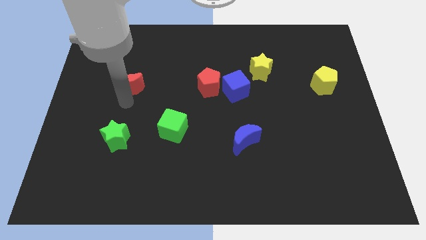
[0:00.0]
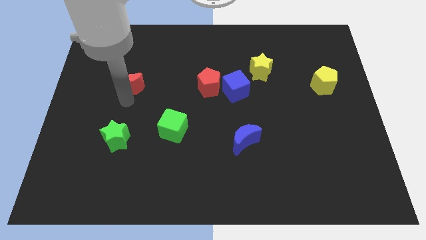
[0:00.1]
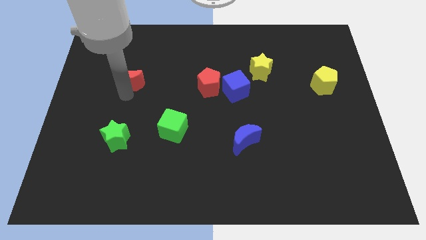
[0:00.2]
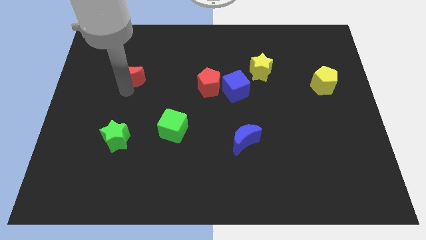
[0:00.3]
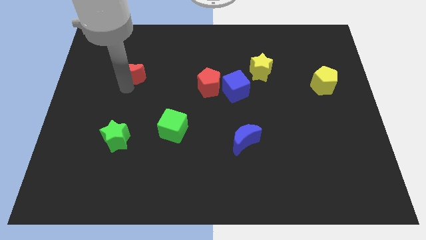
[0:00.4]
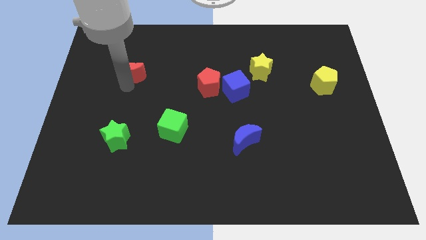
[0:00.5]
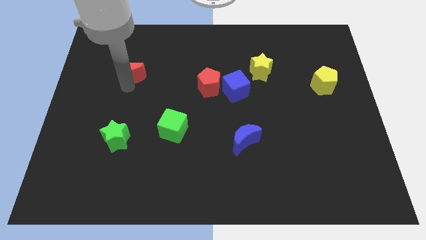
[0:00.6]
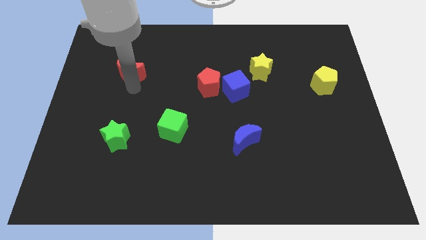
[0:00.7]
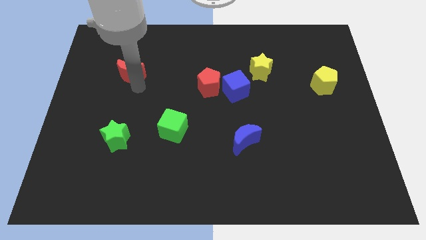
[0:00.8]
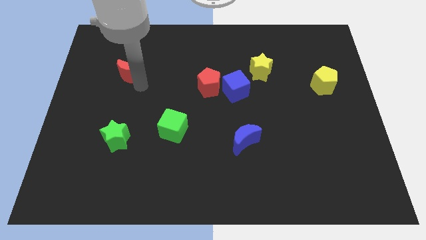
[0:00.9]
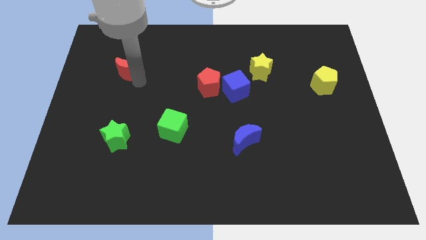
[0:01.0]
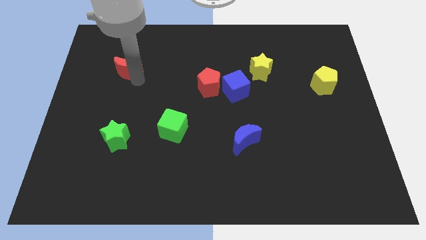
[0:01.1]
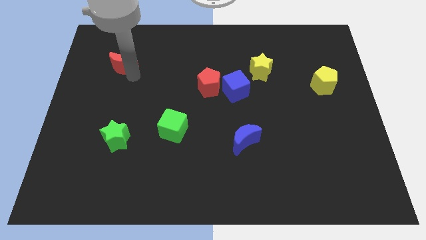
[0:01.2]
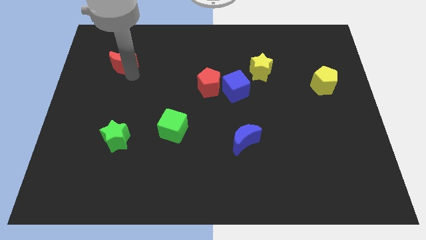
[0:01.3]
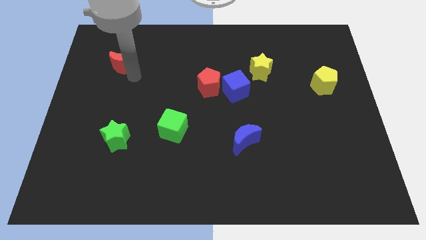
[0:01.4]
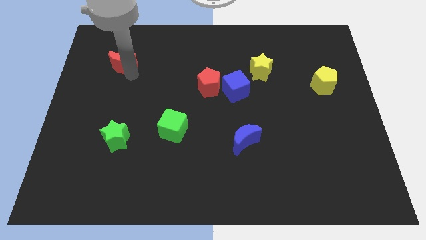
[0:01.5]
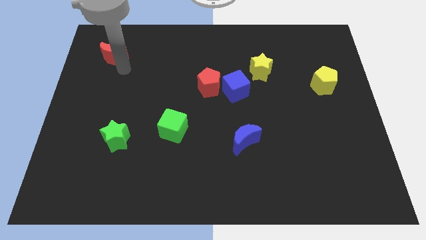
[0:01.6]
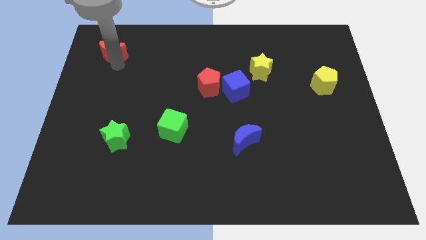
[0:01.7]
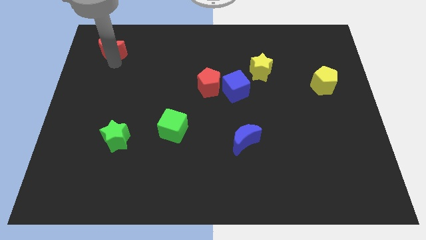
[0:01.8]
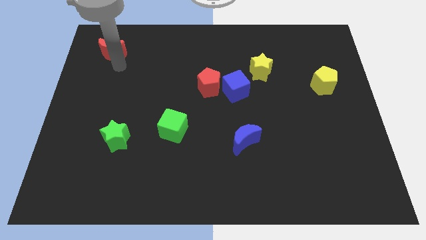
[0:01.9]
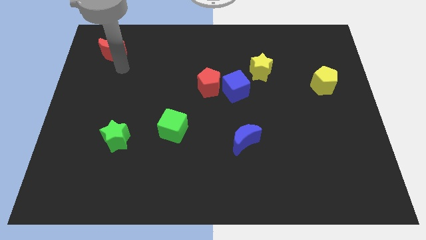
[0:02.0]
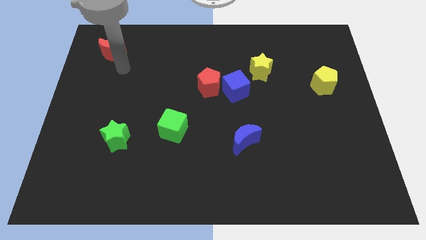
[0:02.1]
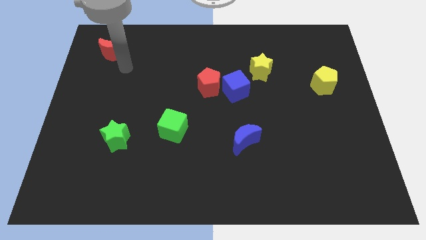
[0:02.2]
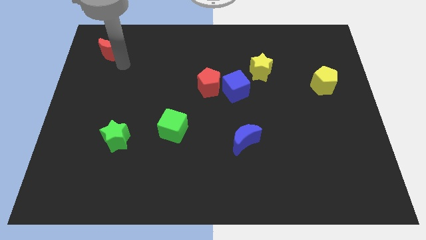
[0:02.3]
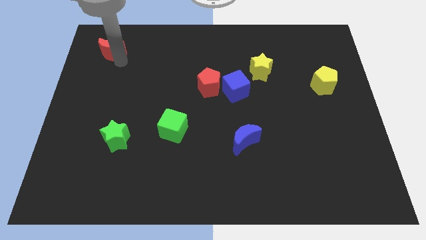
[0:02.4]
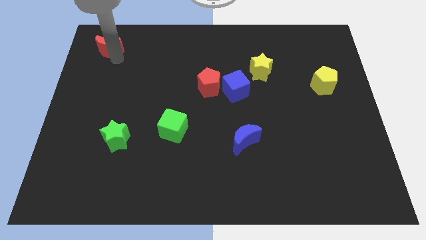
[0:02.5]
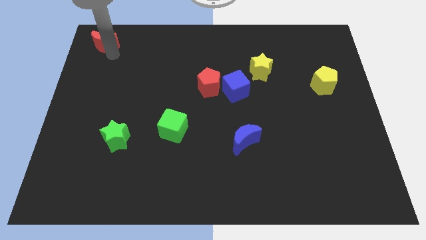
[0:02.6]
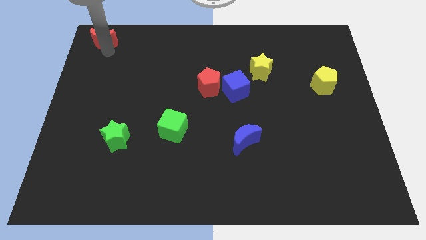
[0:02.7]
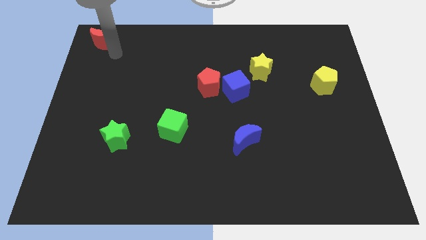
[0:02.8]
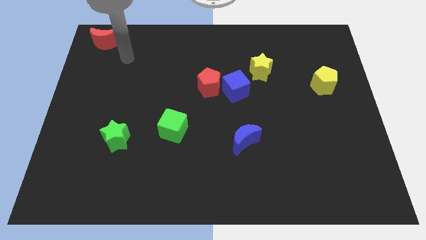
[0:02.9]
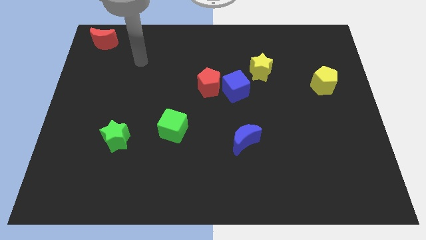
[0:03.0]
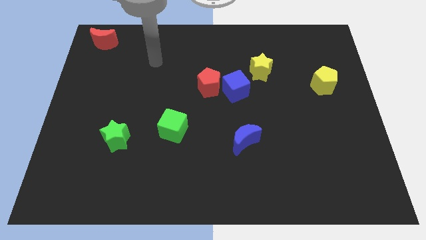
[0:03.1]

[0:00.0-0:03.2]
move the red crescent to the top left corner of the board

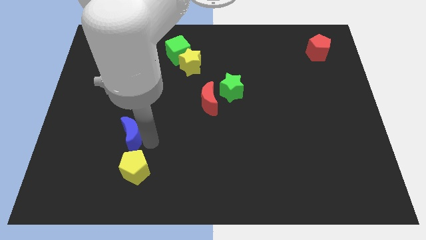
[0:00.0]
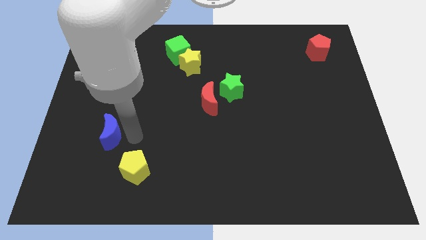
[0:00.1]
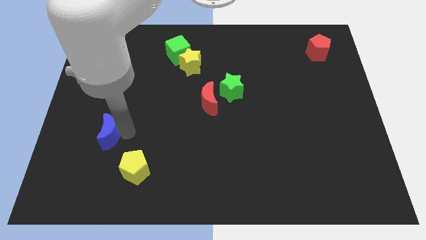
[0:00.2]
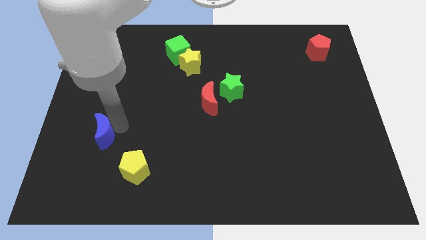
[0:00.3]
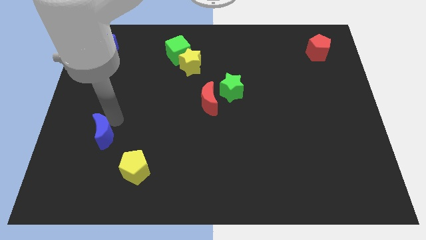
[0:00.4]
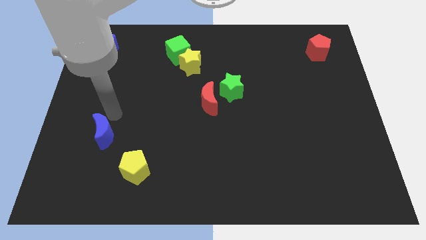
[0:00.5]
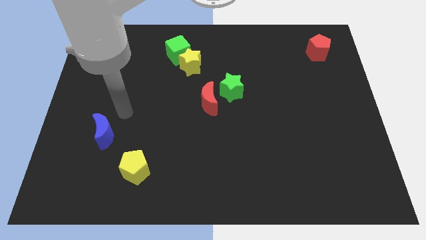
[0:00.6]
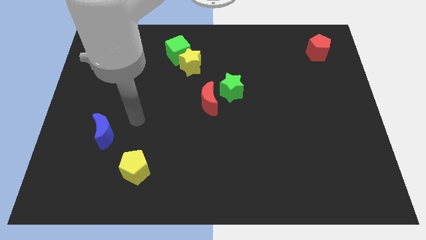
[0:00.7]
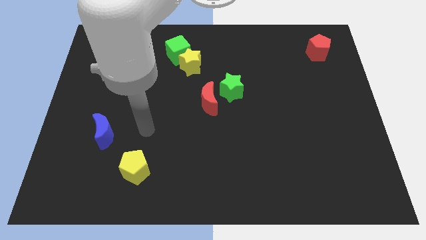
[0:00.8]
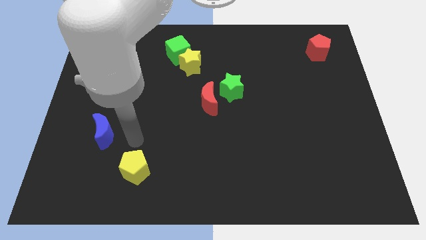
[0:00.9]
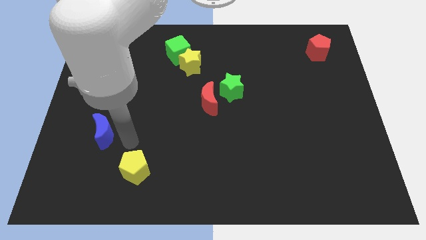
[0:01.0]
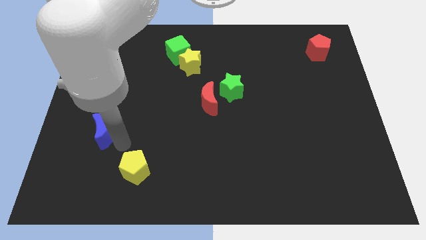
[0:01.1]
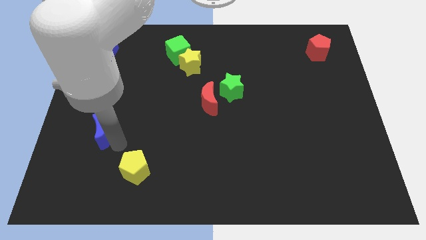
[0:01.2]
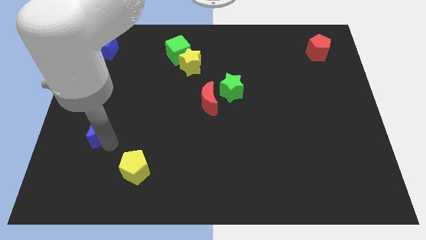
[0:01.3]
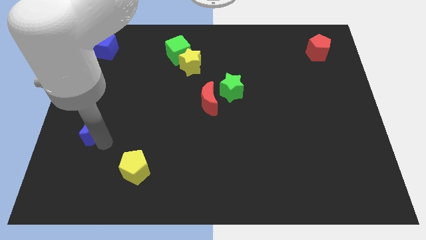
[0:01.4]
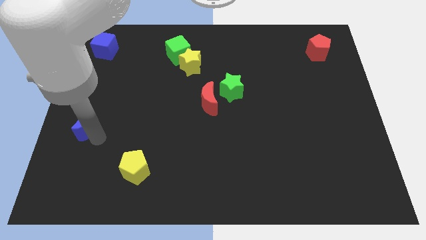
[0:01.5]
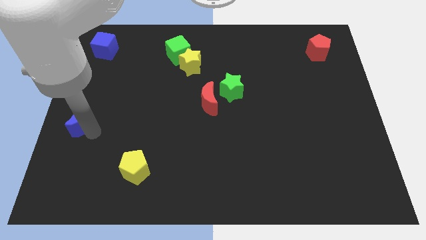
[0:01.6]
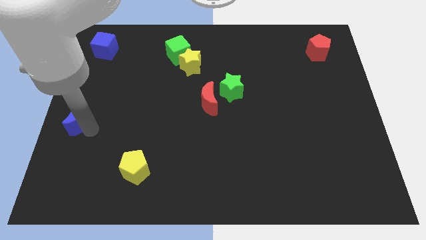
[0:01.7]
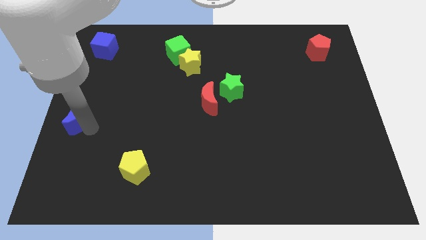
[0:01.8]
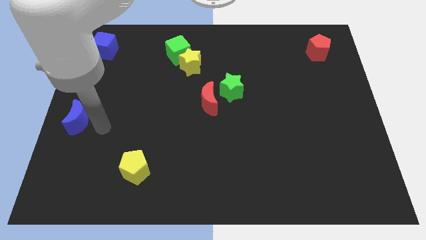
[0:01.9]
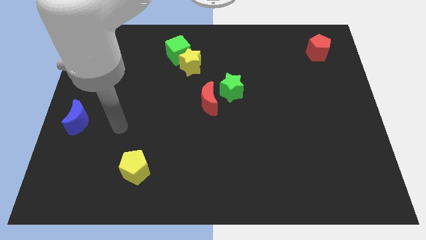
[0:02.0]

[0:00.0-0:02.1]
move the blue crescent away from the yellow pentagon

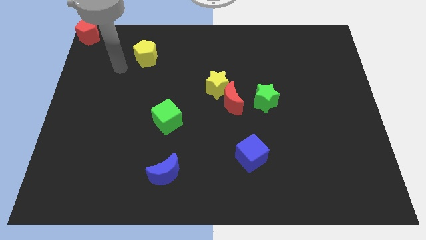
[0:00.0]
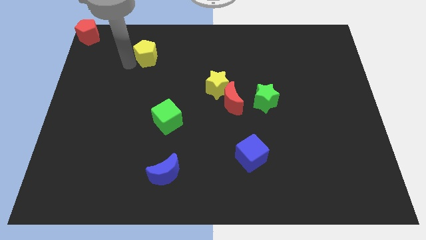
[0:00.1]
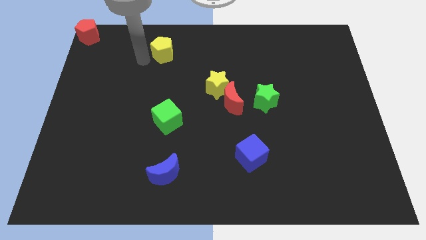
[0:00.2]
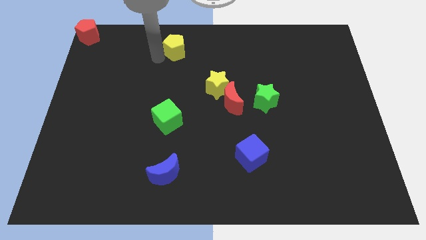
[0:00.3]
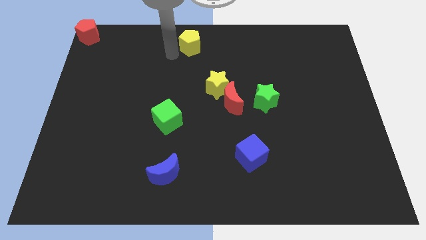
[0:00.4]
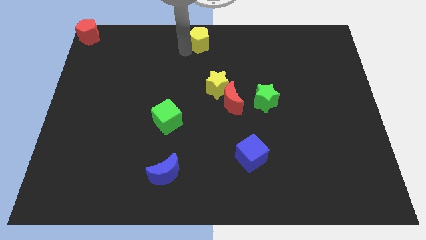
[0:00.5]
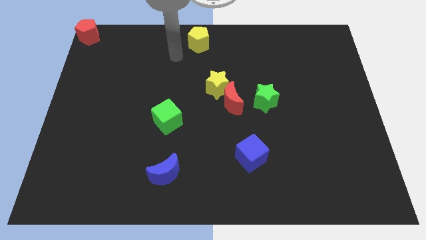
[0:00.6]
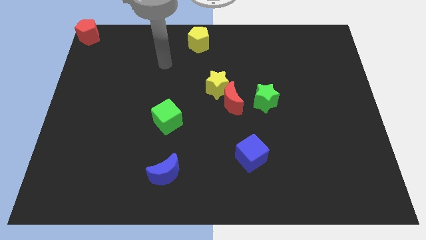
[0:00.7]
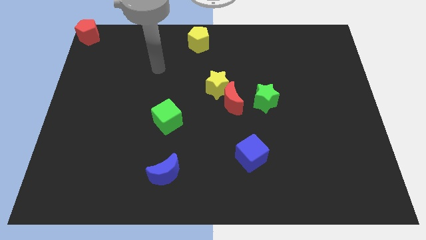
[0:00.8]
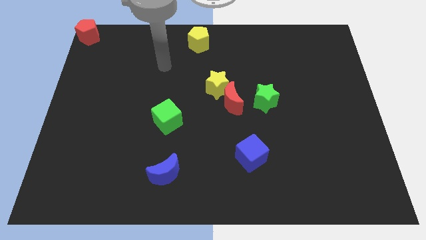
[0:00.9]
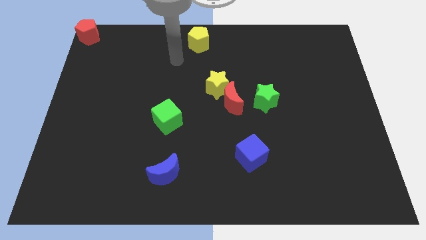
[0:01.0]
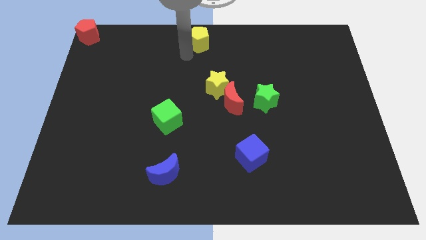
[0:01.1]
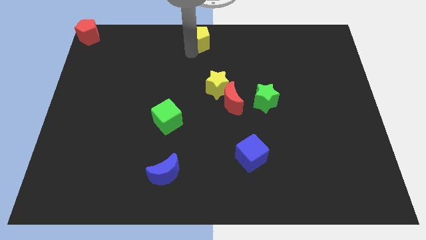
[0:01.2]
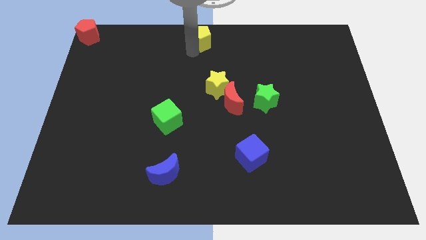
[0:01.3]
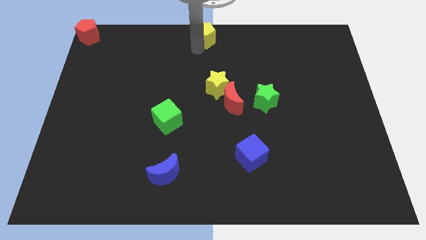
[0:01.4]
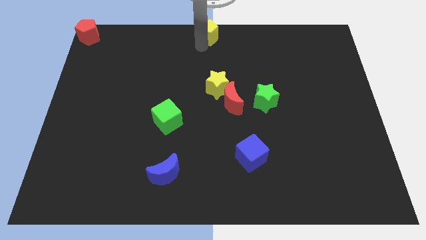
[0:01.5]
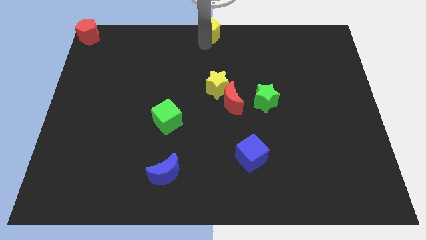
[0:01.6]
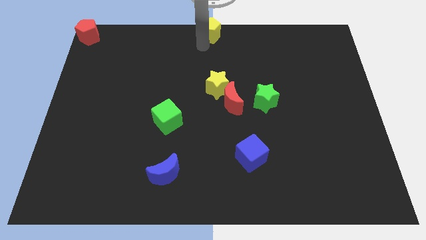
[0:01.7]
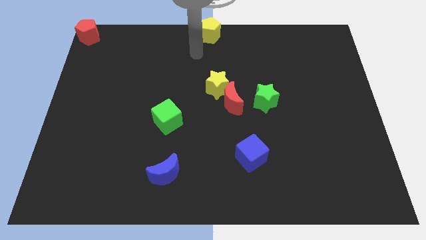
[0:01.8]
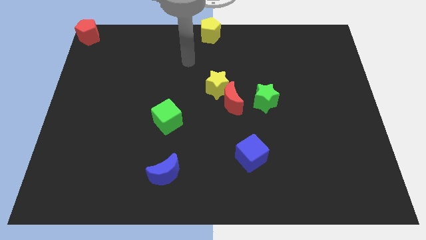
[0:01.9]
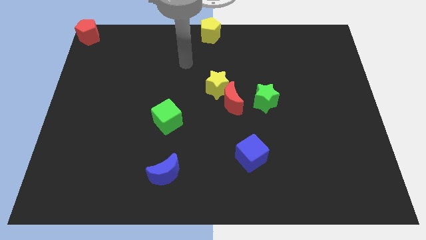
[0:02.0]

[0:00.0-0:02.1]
slide yellow pentagon to the top center

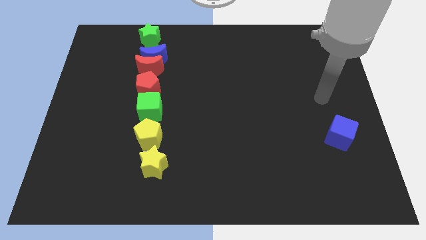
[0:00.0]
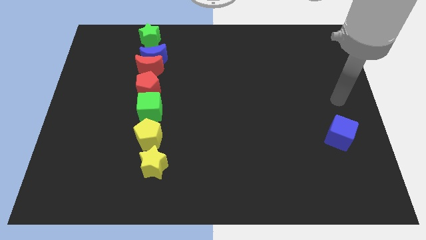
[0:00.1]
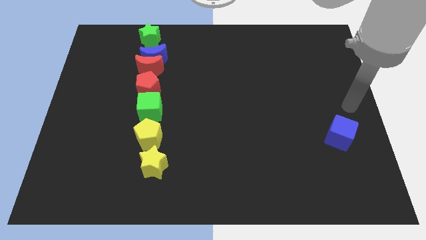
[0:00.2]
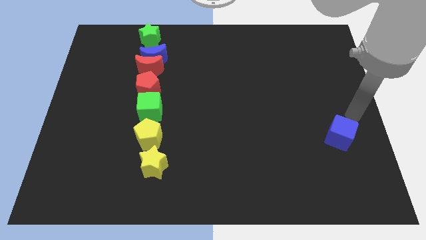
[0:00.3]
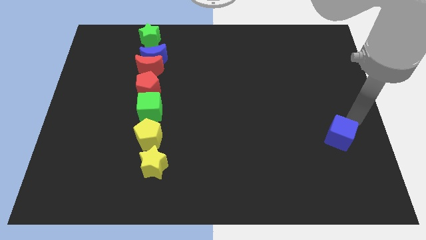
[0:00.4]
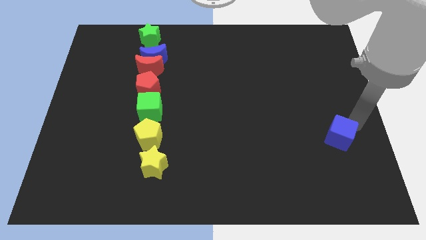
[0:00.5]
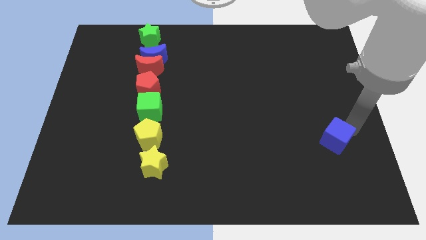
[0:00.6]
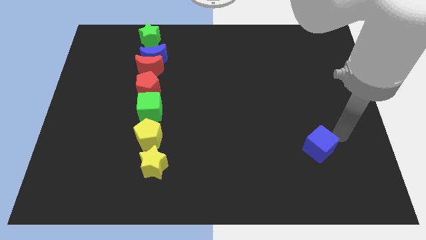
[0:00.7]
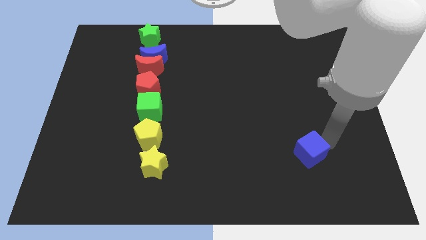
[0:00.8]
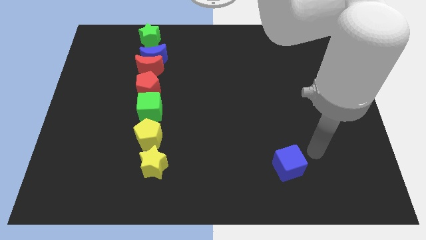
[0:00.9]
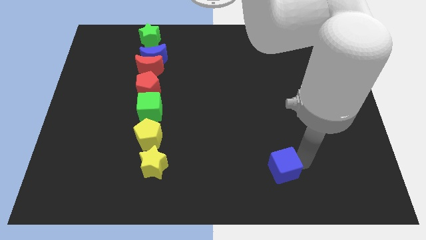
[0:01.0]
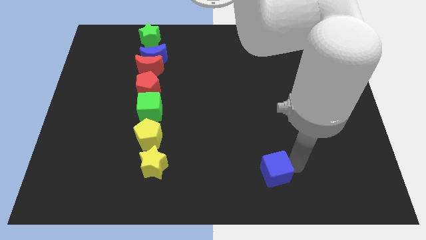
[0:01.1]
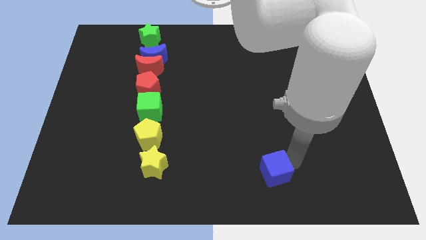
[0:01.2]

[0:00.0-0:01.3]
move the blue cube to the bottom left of the board

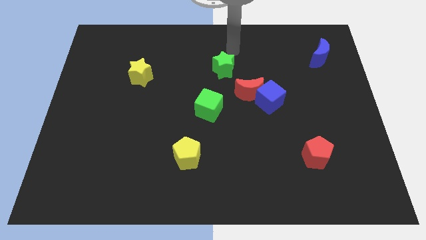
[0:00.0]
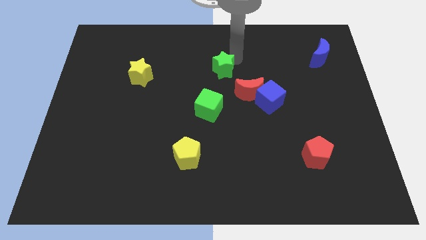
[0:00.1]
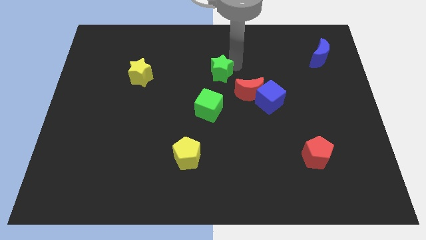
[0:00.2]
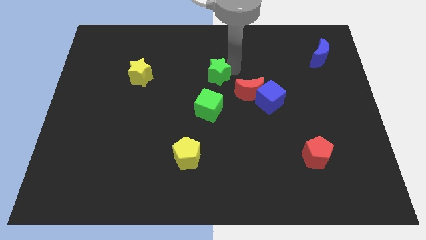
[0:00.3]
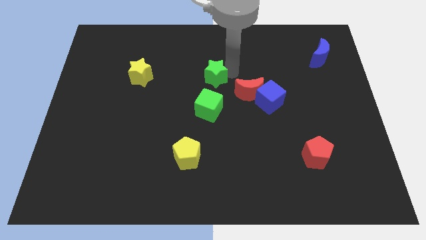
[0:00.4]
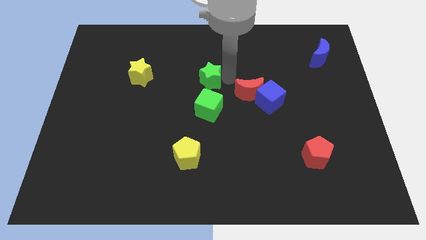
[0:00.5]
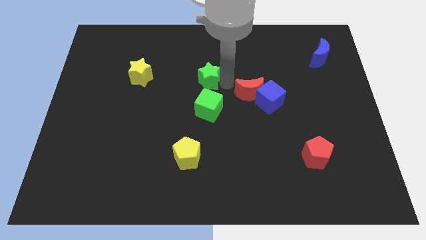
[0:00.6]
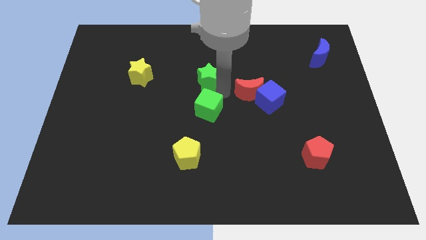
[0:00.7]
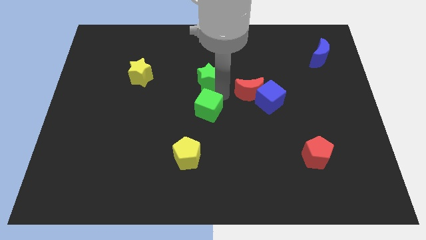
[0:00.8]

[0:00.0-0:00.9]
move green star left above green cube
